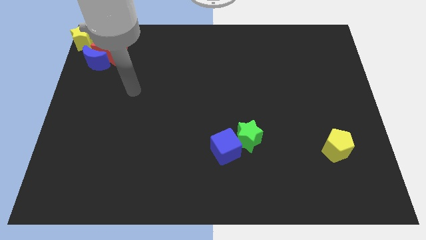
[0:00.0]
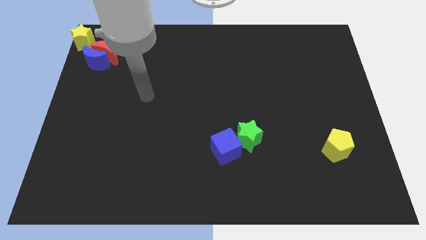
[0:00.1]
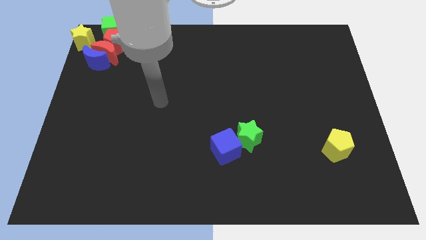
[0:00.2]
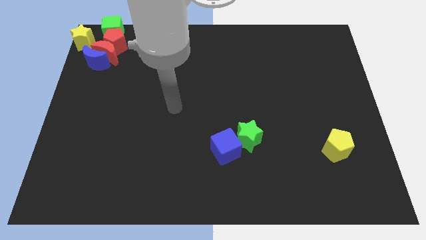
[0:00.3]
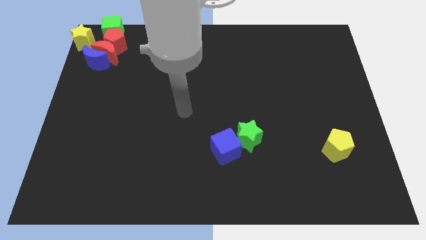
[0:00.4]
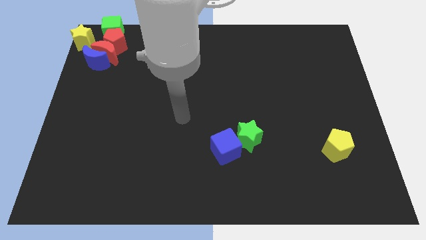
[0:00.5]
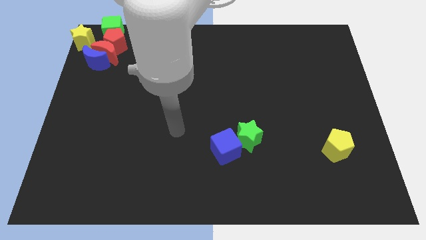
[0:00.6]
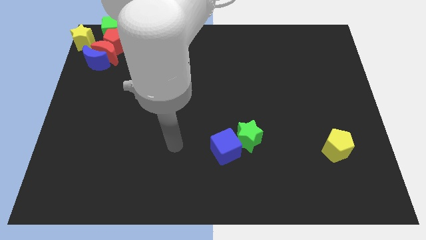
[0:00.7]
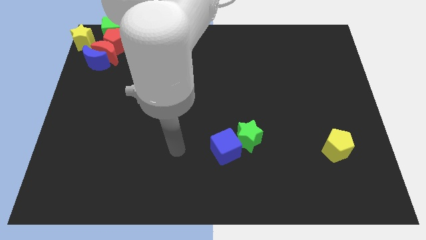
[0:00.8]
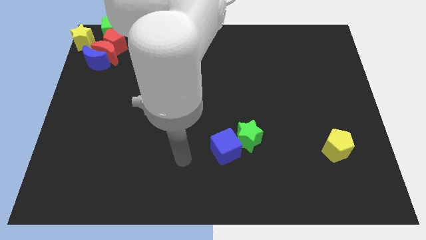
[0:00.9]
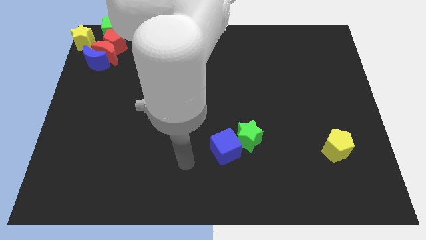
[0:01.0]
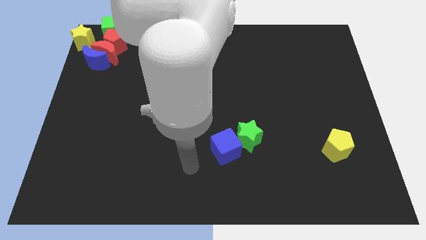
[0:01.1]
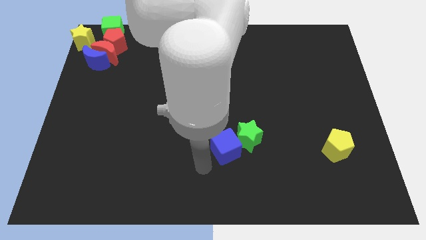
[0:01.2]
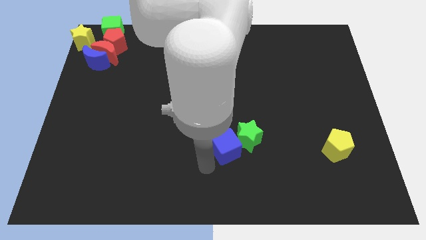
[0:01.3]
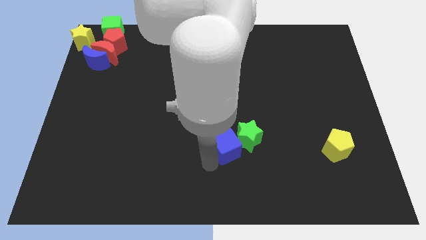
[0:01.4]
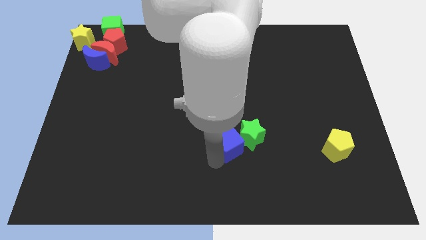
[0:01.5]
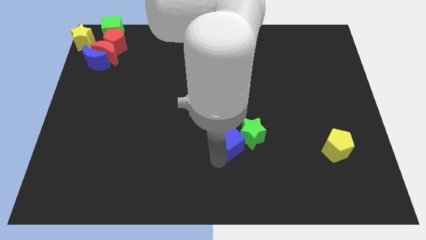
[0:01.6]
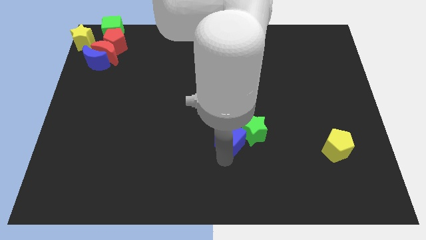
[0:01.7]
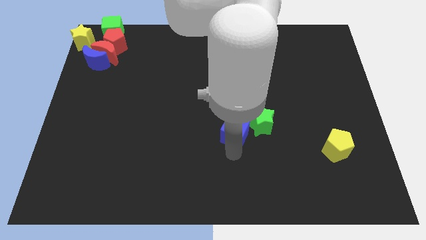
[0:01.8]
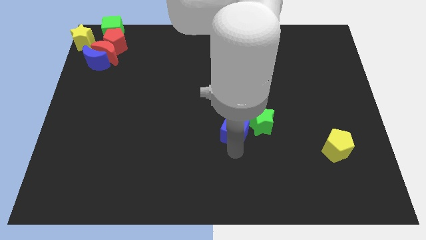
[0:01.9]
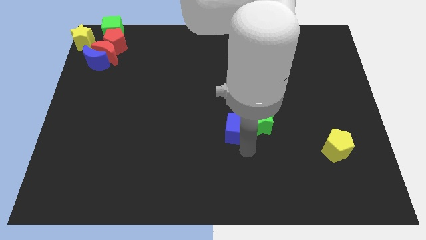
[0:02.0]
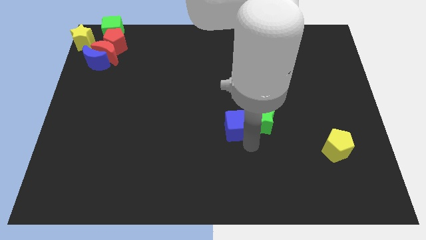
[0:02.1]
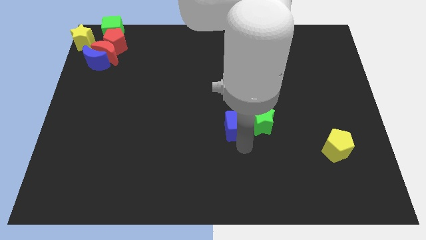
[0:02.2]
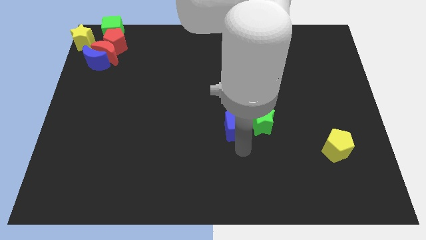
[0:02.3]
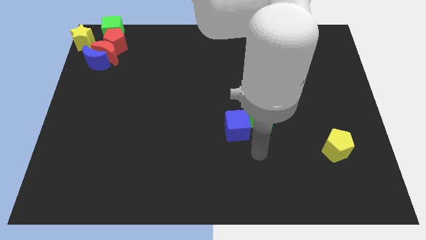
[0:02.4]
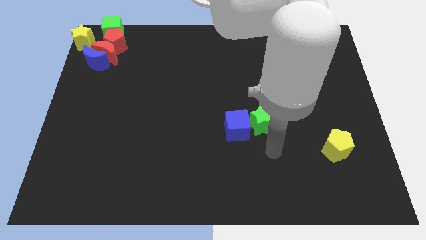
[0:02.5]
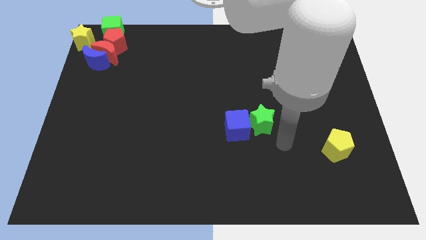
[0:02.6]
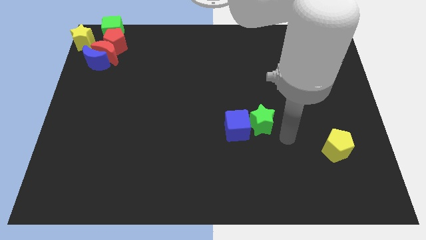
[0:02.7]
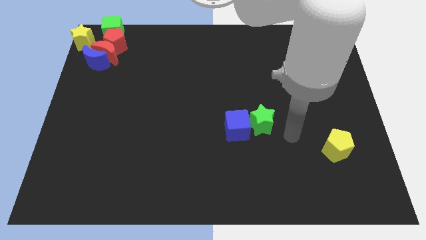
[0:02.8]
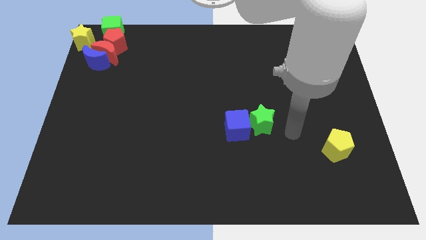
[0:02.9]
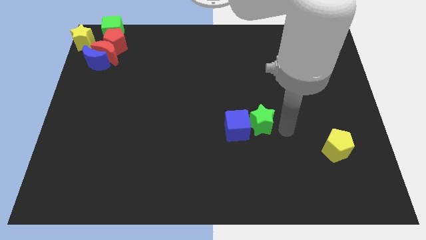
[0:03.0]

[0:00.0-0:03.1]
push the blue cube slightly into the green star

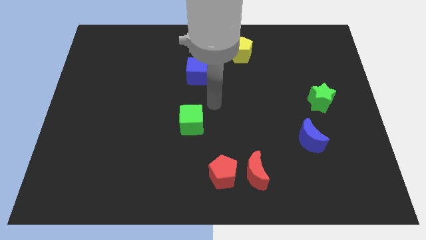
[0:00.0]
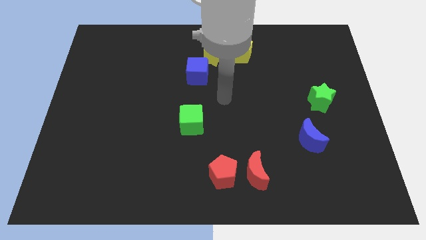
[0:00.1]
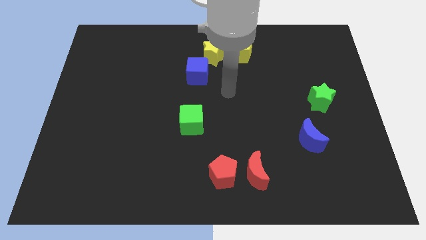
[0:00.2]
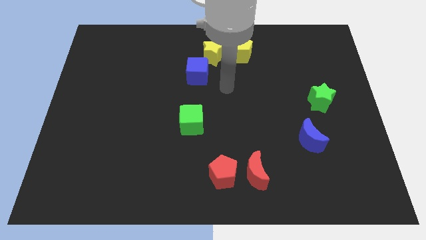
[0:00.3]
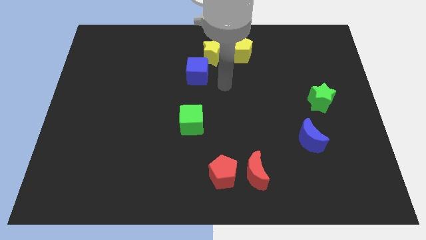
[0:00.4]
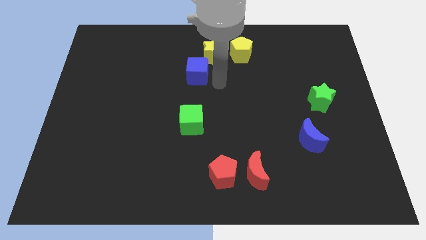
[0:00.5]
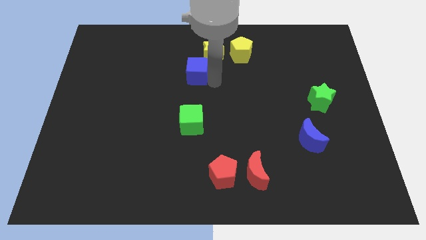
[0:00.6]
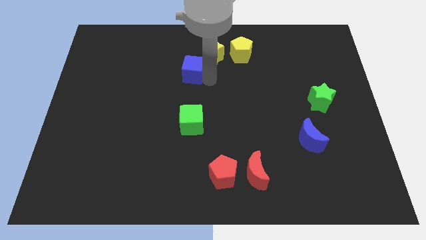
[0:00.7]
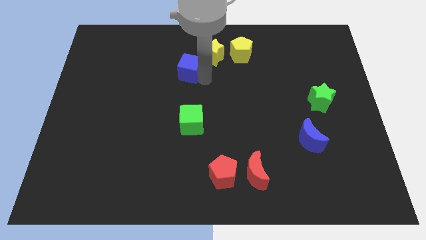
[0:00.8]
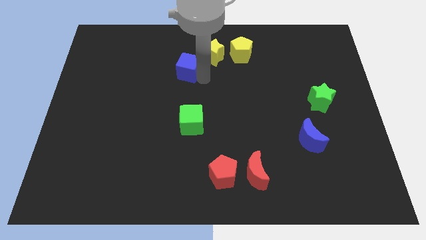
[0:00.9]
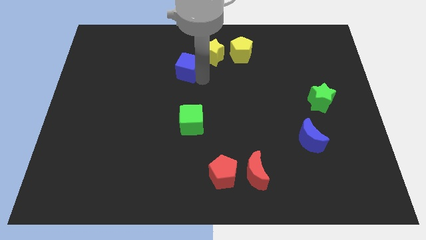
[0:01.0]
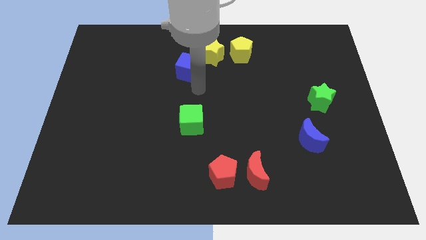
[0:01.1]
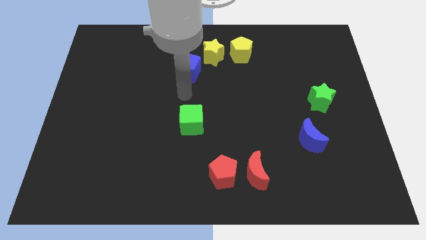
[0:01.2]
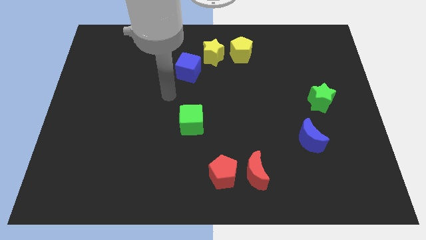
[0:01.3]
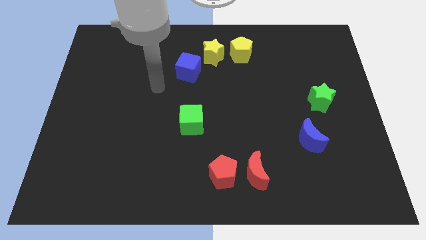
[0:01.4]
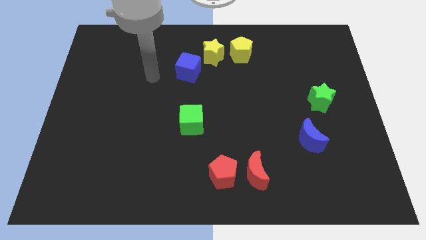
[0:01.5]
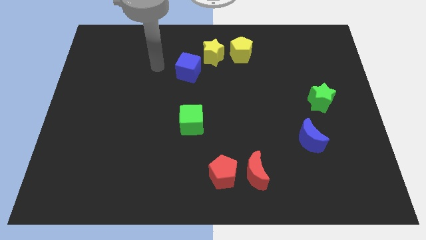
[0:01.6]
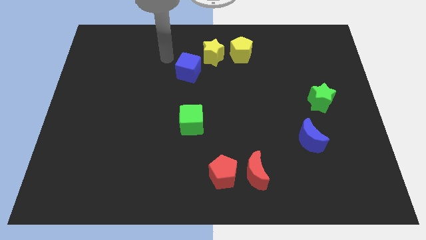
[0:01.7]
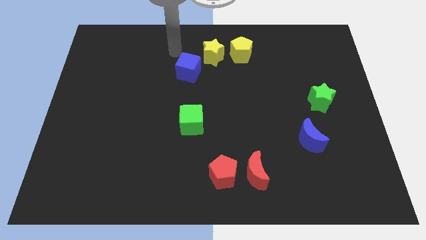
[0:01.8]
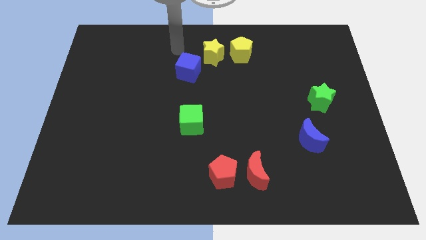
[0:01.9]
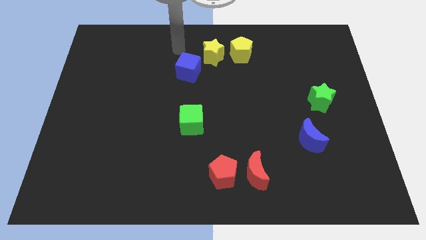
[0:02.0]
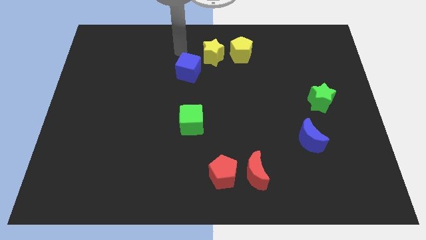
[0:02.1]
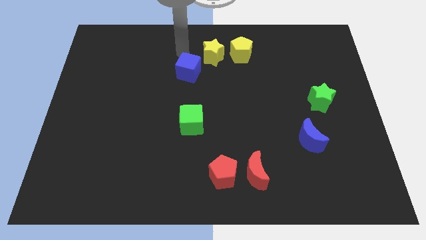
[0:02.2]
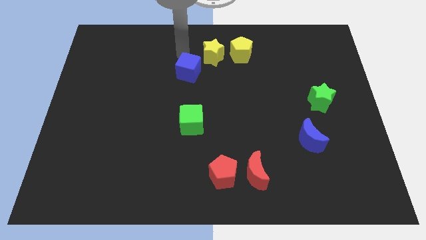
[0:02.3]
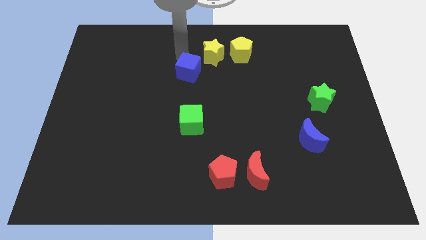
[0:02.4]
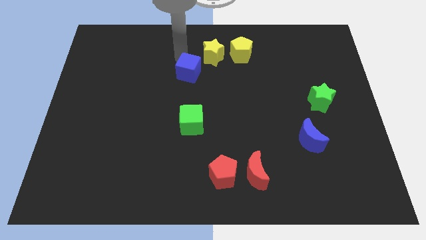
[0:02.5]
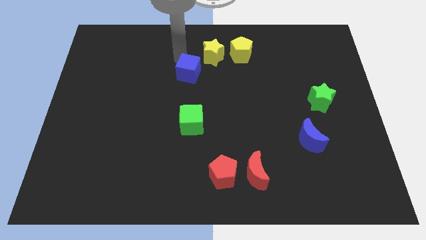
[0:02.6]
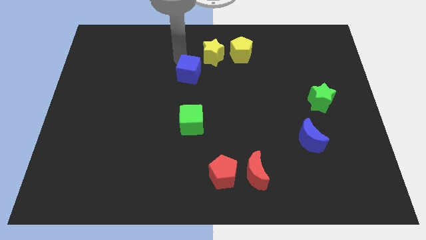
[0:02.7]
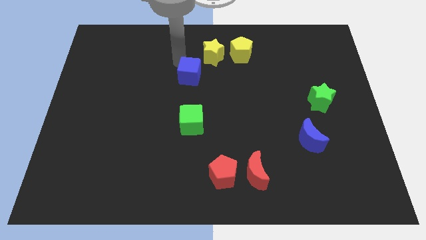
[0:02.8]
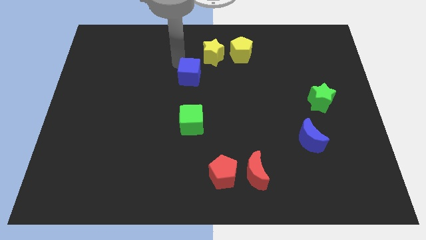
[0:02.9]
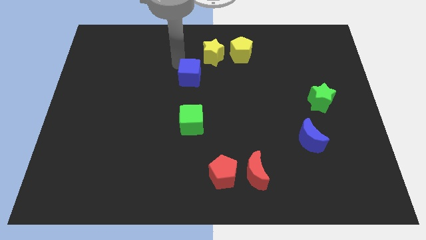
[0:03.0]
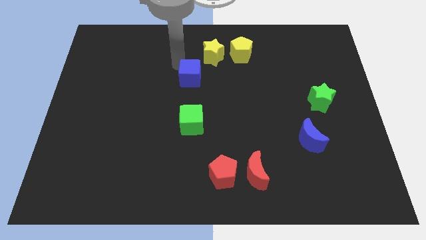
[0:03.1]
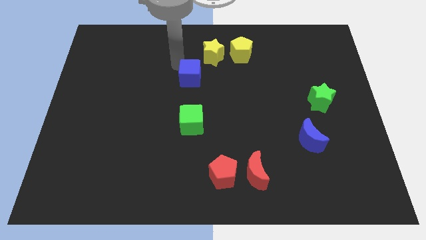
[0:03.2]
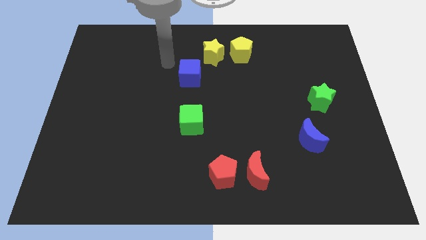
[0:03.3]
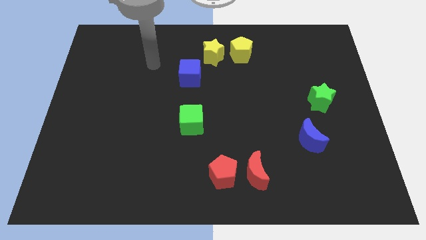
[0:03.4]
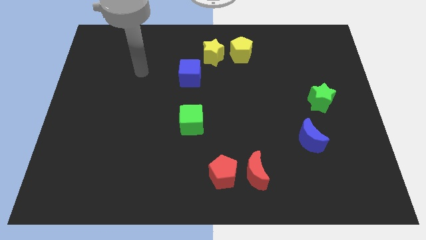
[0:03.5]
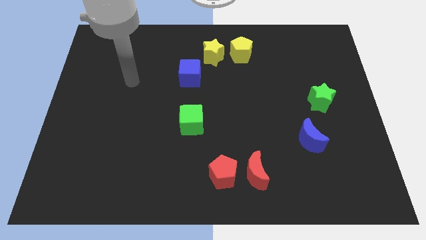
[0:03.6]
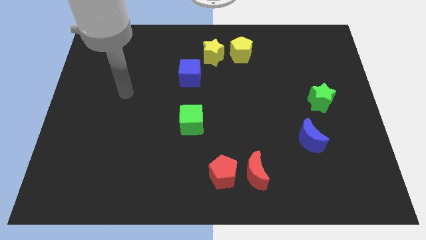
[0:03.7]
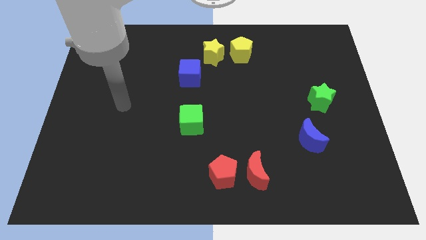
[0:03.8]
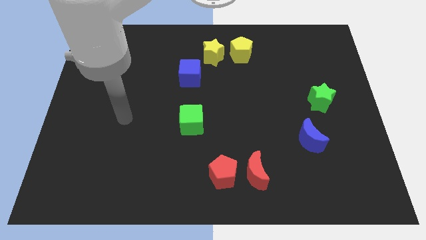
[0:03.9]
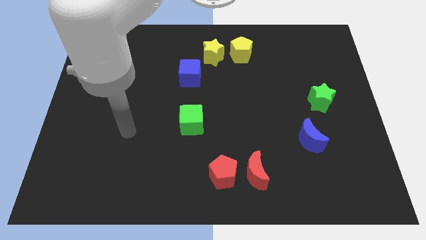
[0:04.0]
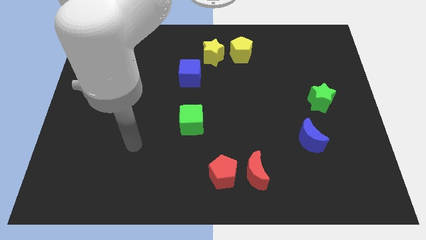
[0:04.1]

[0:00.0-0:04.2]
adjust the blue cube below the yellow star

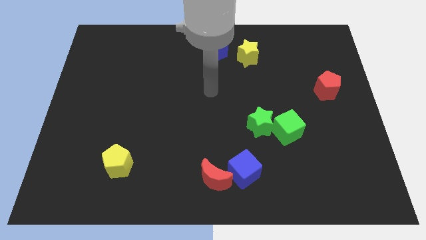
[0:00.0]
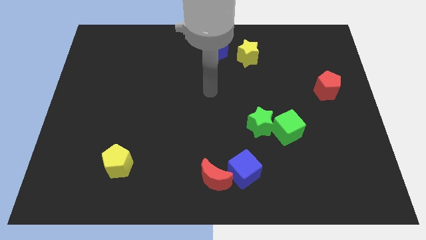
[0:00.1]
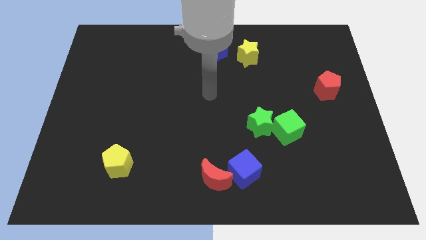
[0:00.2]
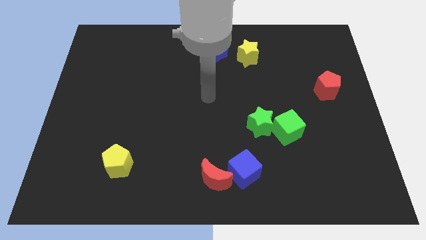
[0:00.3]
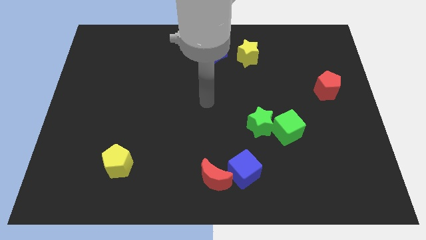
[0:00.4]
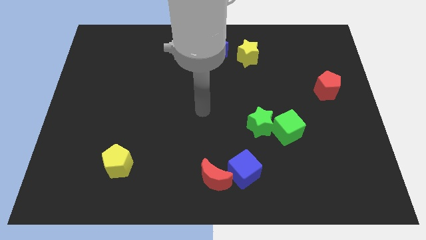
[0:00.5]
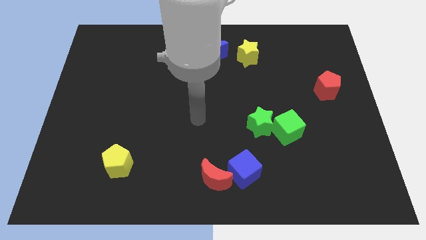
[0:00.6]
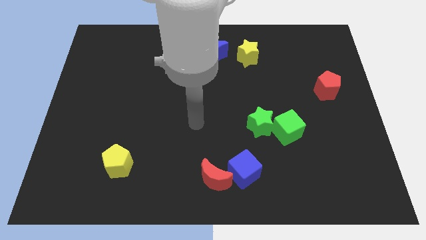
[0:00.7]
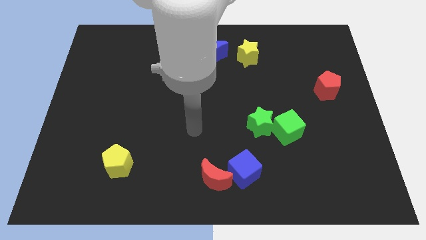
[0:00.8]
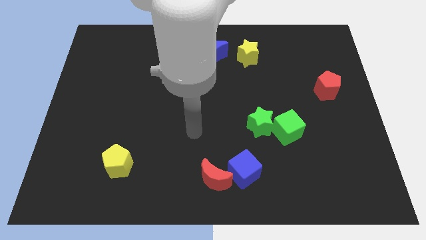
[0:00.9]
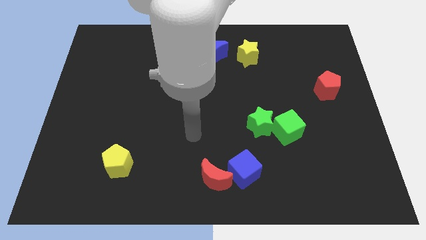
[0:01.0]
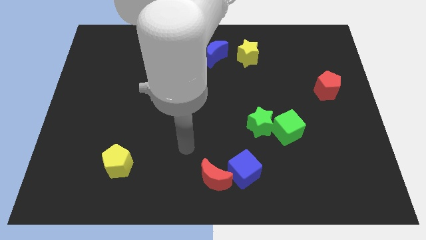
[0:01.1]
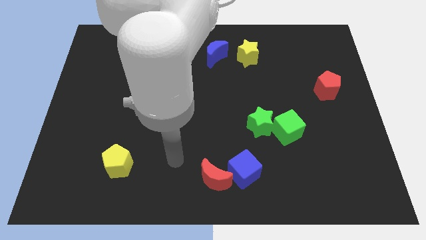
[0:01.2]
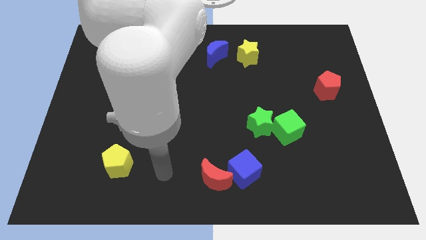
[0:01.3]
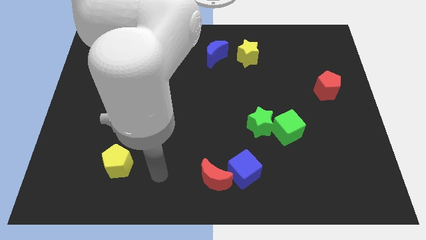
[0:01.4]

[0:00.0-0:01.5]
place your hand in between yellow pentagon and red crescent
